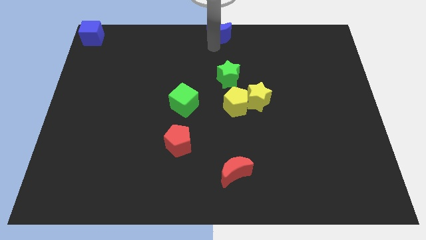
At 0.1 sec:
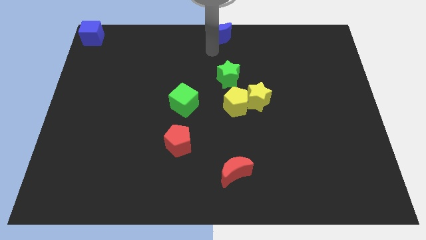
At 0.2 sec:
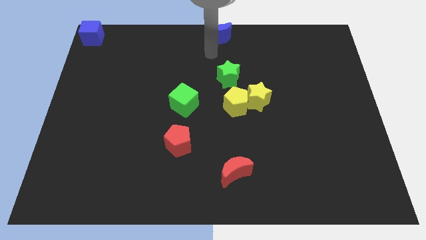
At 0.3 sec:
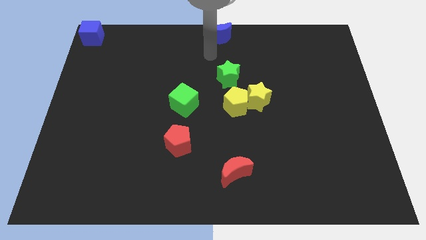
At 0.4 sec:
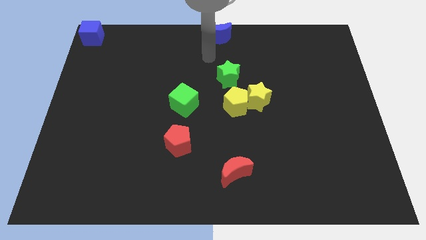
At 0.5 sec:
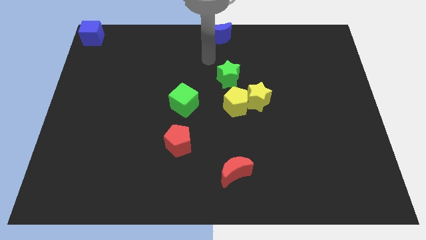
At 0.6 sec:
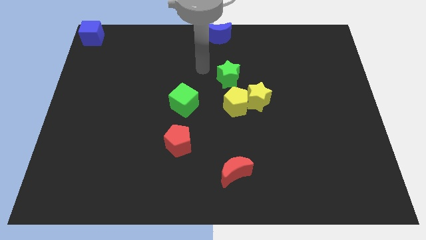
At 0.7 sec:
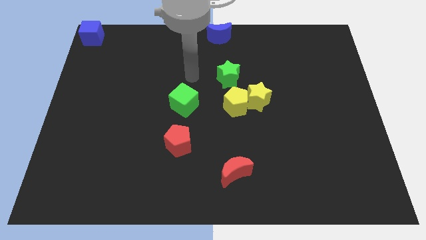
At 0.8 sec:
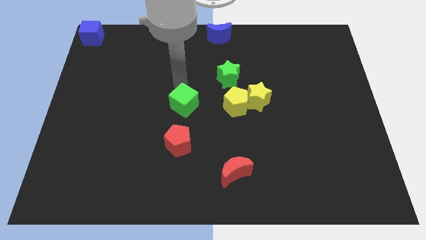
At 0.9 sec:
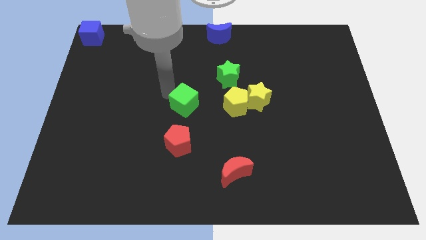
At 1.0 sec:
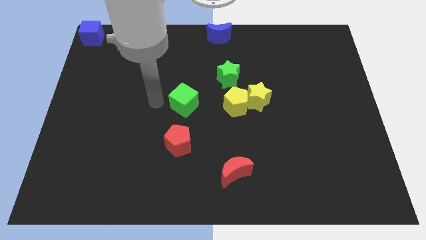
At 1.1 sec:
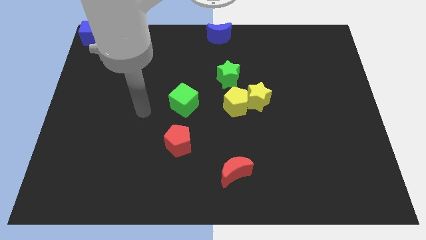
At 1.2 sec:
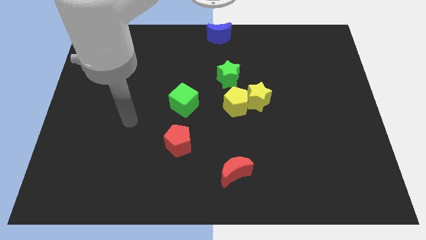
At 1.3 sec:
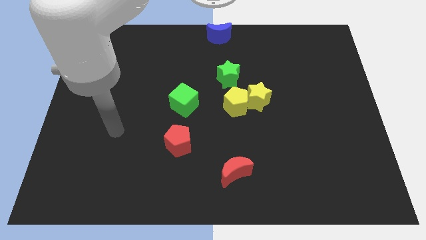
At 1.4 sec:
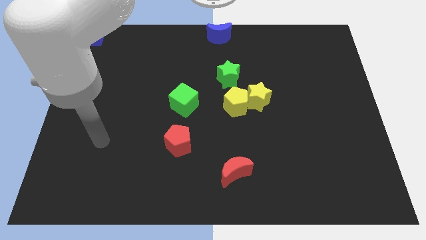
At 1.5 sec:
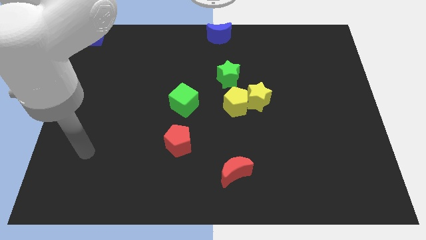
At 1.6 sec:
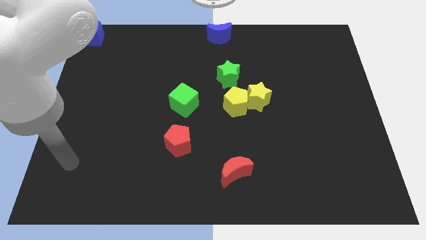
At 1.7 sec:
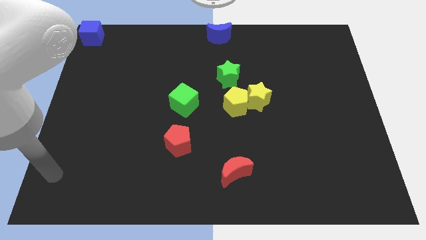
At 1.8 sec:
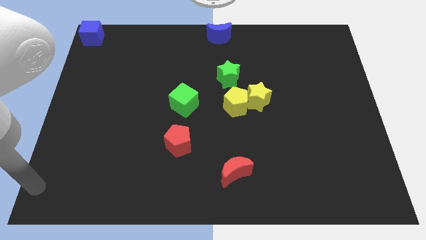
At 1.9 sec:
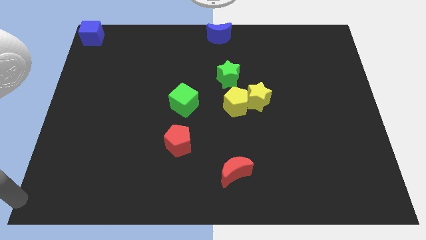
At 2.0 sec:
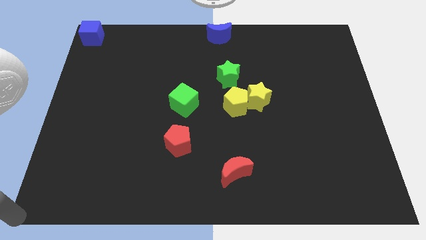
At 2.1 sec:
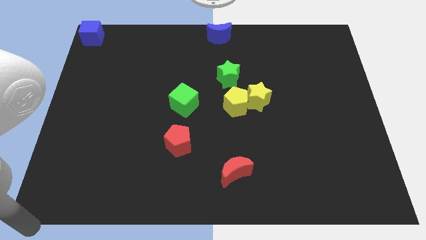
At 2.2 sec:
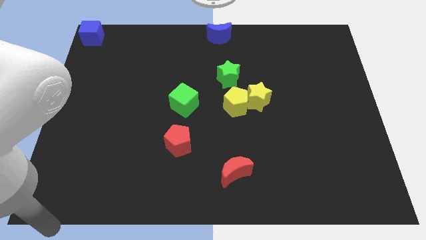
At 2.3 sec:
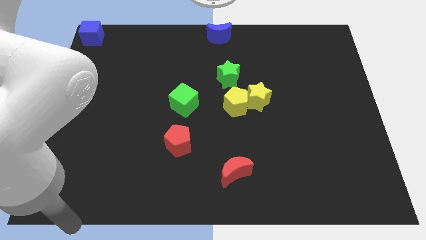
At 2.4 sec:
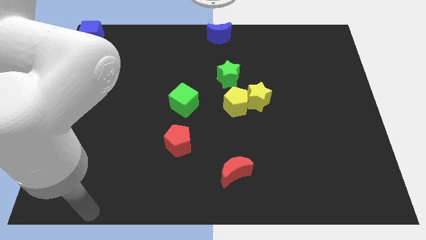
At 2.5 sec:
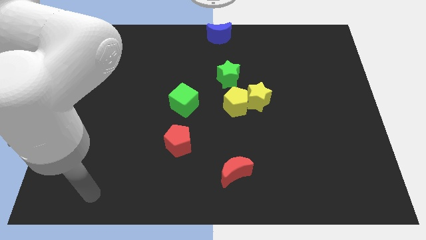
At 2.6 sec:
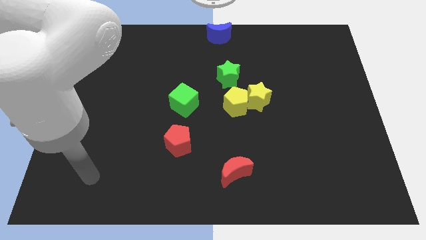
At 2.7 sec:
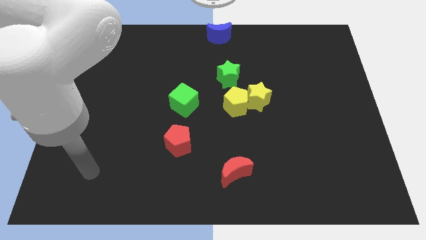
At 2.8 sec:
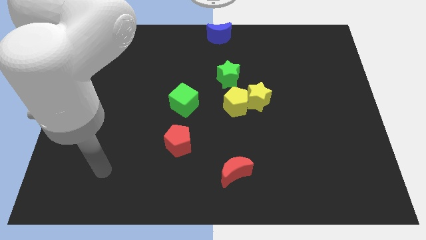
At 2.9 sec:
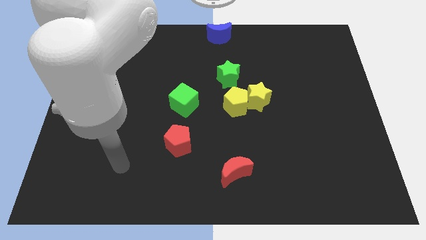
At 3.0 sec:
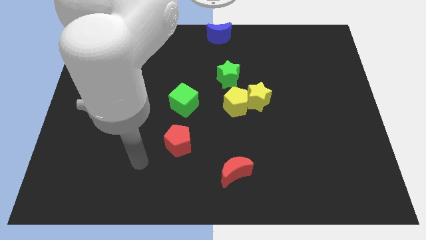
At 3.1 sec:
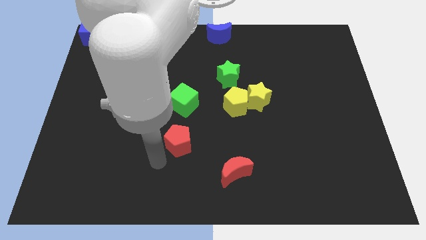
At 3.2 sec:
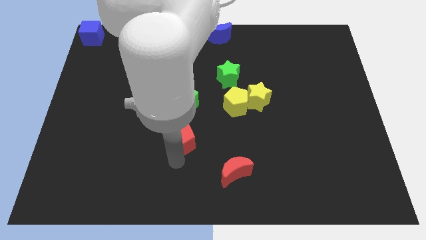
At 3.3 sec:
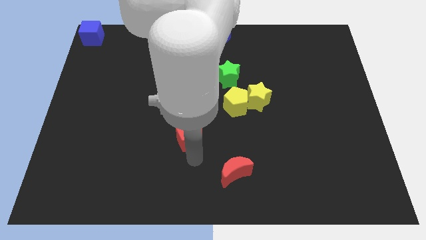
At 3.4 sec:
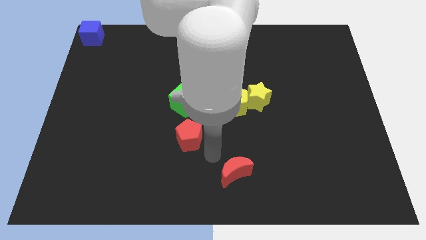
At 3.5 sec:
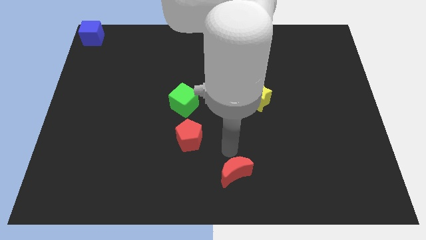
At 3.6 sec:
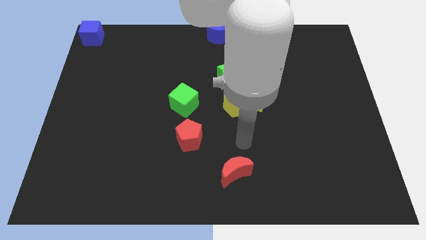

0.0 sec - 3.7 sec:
slightly push the red pentagon towards right

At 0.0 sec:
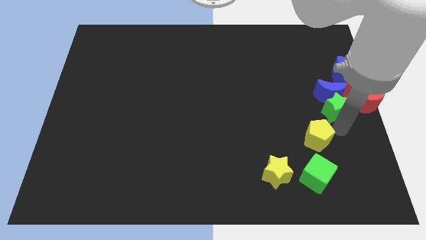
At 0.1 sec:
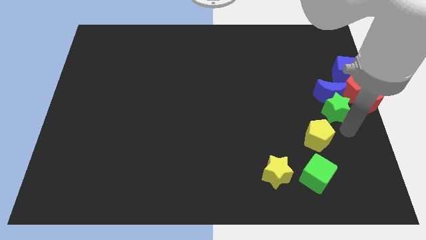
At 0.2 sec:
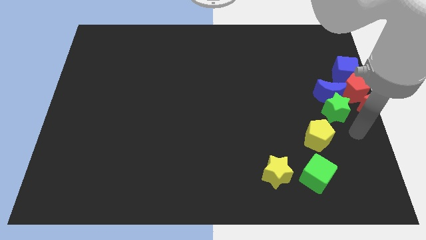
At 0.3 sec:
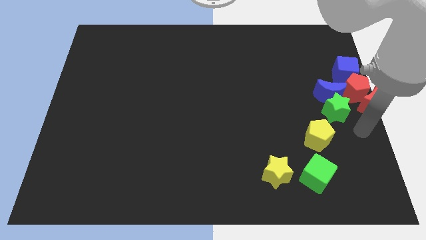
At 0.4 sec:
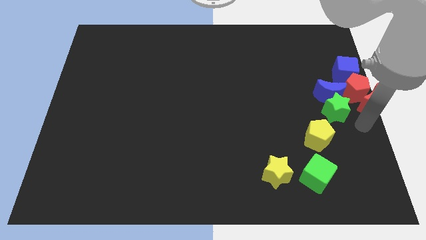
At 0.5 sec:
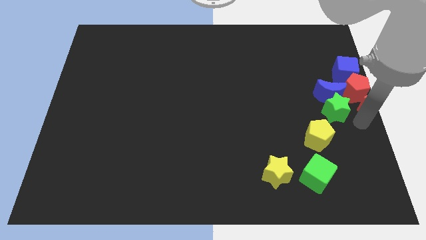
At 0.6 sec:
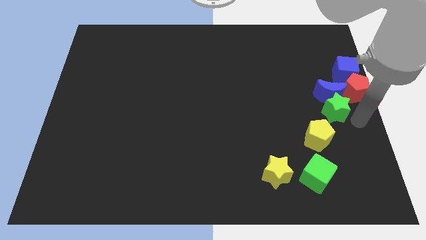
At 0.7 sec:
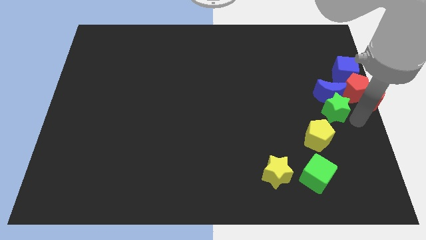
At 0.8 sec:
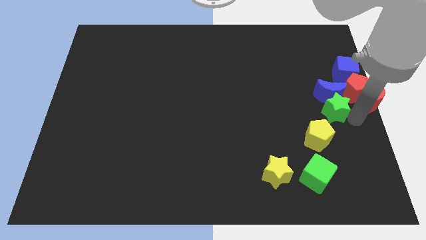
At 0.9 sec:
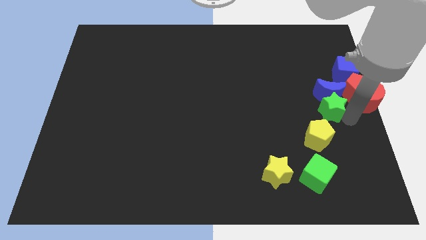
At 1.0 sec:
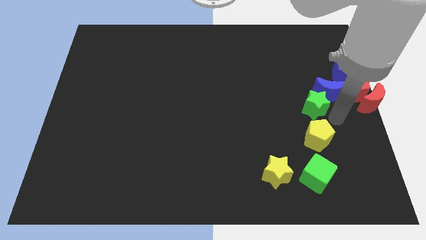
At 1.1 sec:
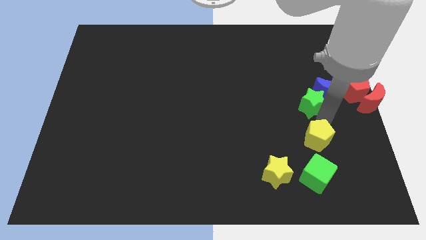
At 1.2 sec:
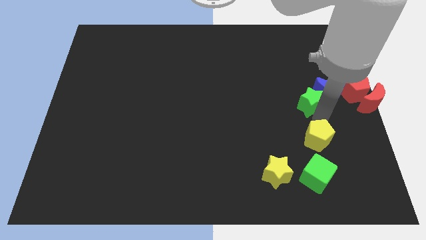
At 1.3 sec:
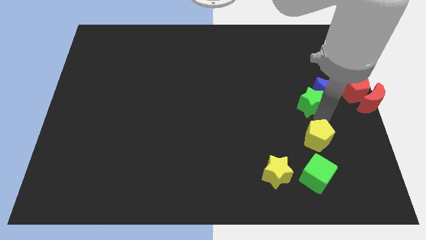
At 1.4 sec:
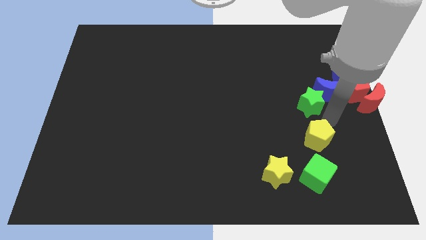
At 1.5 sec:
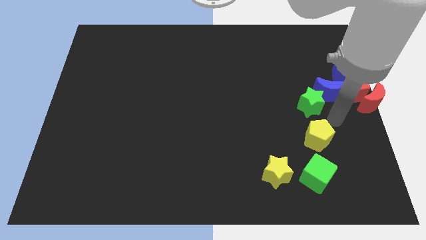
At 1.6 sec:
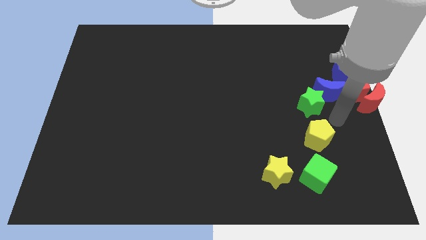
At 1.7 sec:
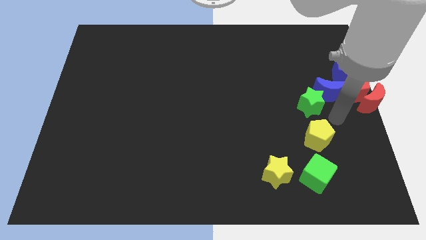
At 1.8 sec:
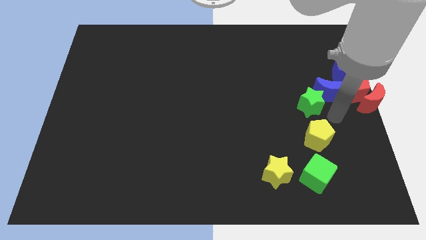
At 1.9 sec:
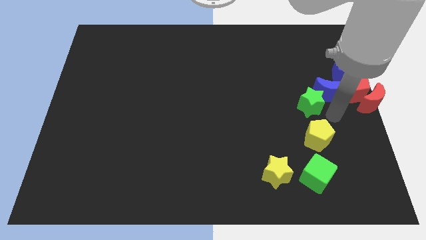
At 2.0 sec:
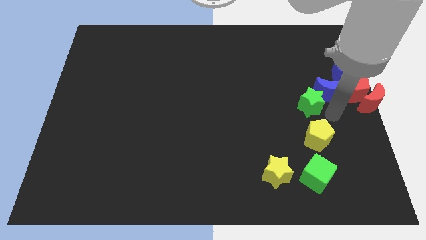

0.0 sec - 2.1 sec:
push green star above yellow pentagon

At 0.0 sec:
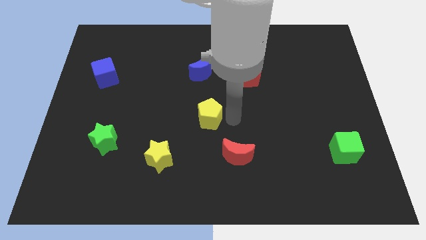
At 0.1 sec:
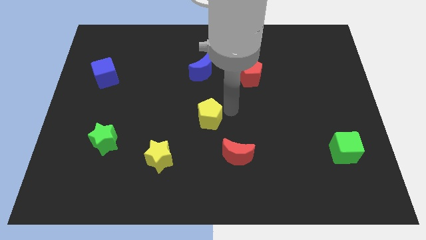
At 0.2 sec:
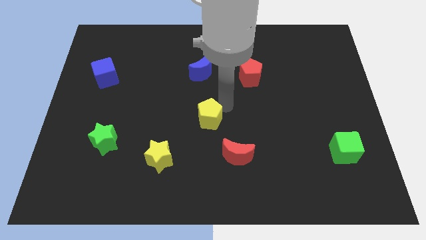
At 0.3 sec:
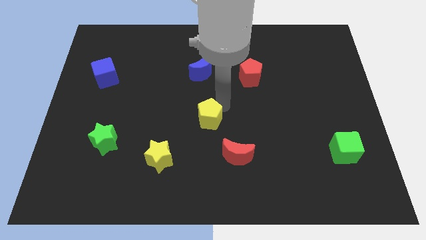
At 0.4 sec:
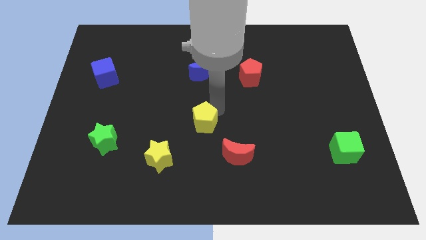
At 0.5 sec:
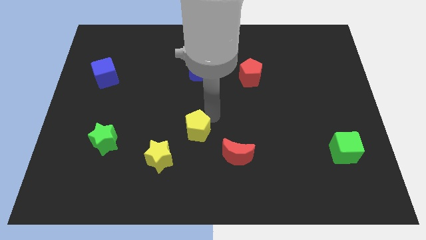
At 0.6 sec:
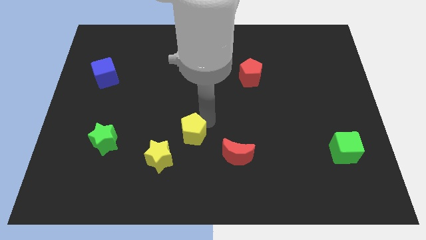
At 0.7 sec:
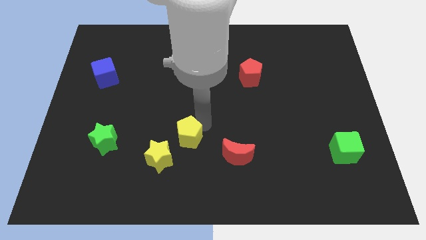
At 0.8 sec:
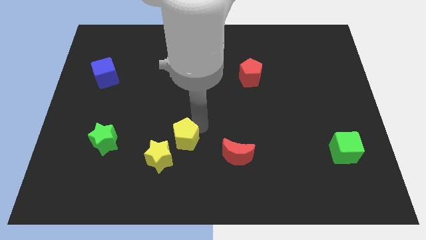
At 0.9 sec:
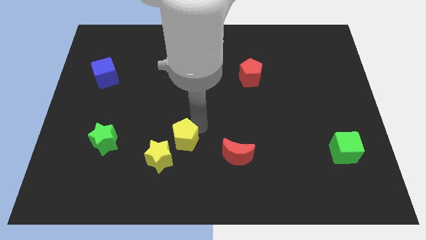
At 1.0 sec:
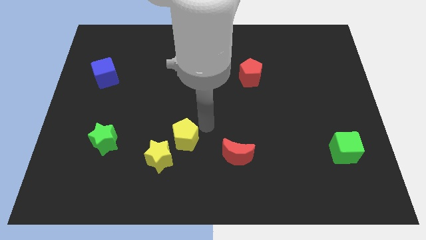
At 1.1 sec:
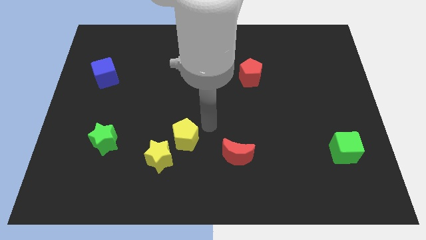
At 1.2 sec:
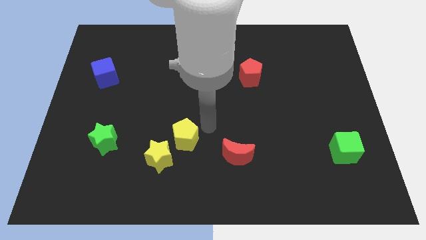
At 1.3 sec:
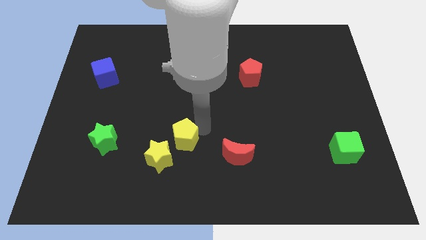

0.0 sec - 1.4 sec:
move the yellow pentagon to the top right side of the yellow star

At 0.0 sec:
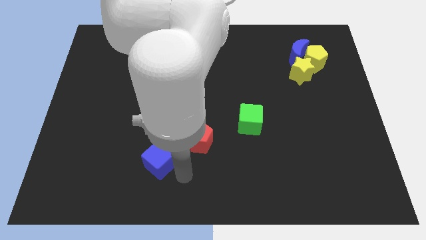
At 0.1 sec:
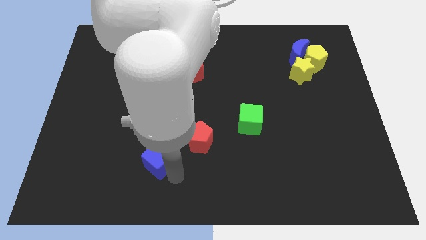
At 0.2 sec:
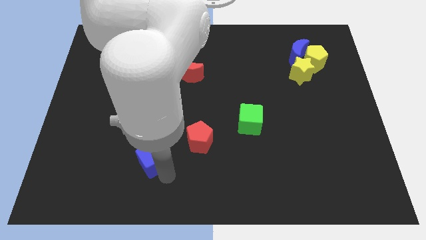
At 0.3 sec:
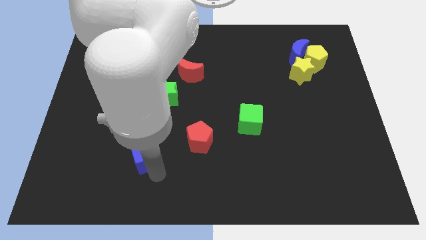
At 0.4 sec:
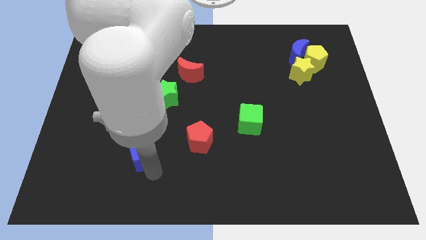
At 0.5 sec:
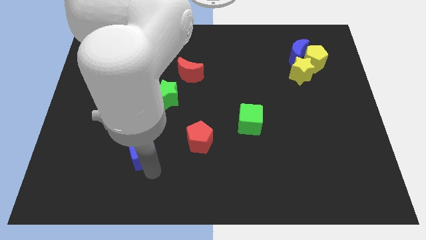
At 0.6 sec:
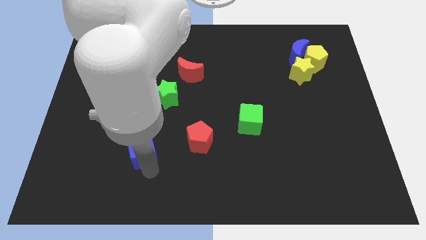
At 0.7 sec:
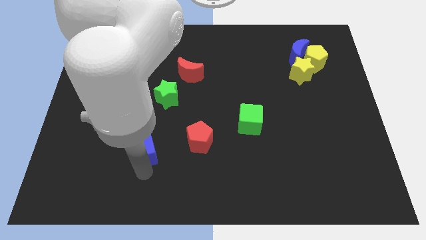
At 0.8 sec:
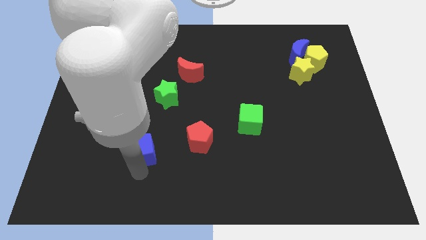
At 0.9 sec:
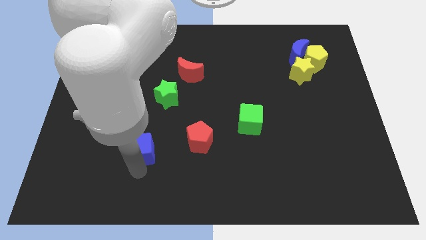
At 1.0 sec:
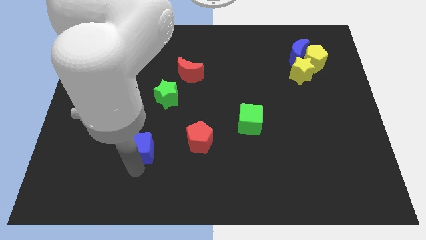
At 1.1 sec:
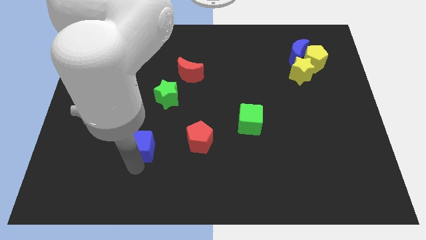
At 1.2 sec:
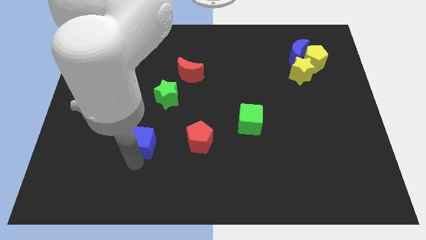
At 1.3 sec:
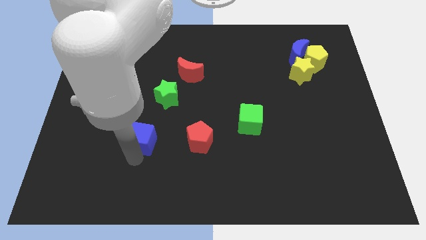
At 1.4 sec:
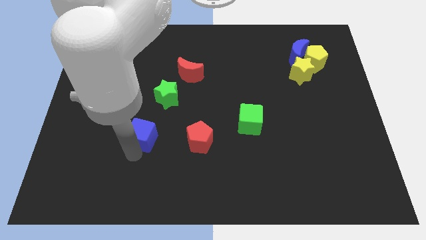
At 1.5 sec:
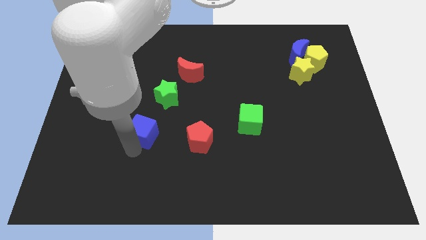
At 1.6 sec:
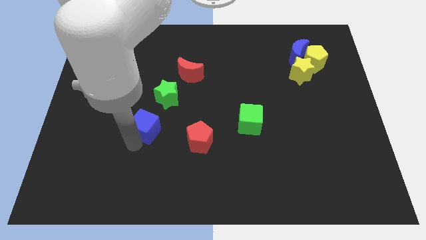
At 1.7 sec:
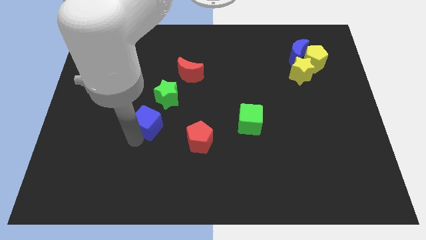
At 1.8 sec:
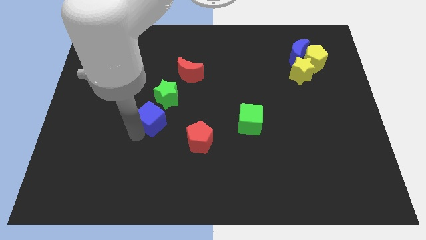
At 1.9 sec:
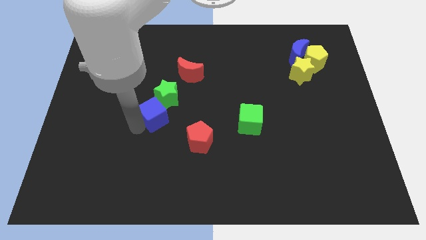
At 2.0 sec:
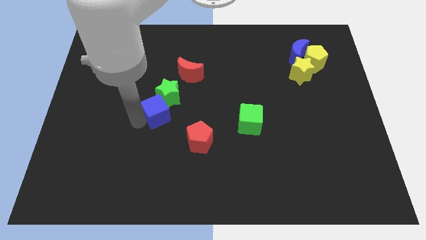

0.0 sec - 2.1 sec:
push the blue cube into the green star
